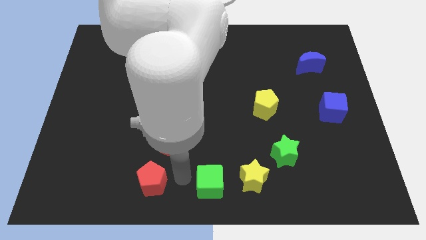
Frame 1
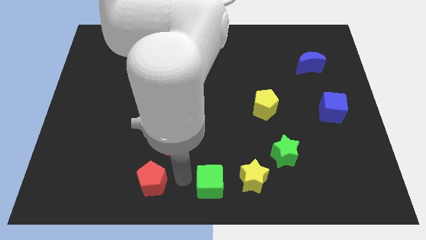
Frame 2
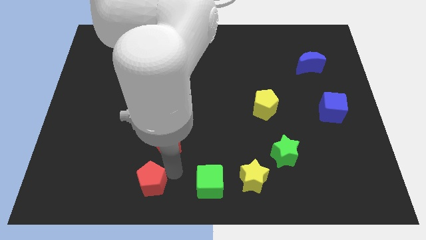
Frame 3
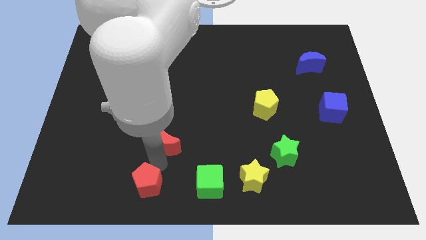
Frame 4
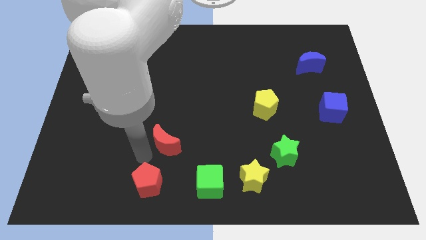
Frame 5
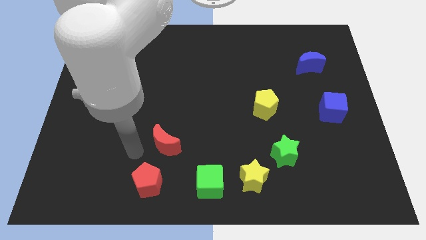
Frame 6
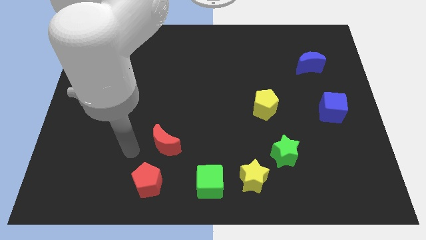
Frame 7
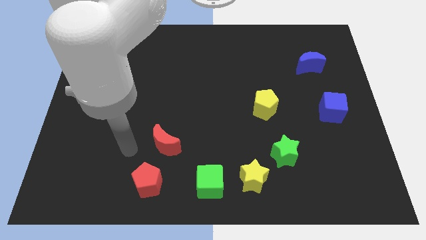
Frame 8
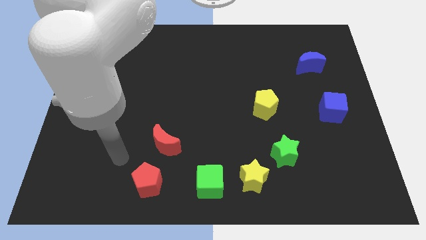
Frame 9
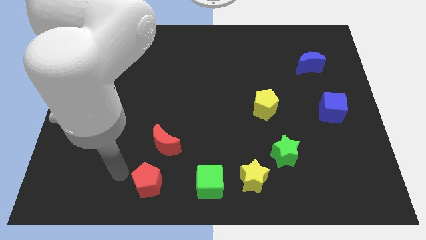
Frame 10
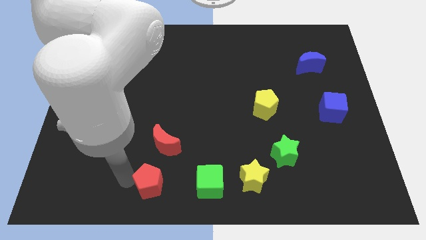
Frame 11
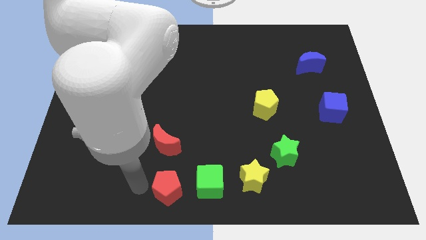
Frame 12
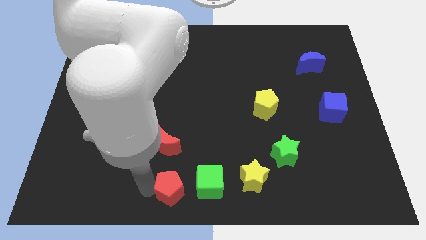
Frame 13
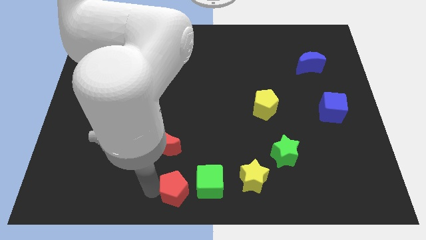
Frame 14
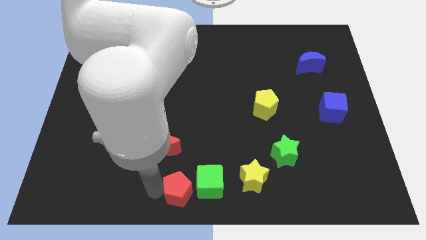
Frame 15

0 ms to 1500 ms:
slide the red pentagon close to the left side of the green cube

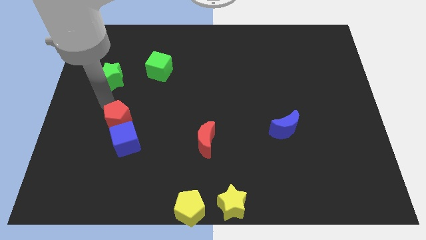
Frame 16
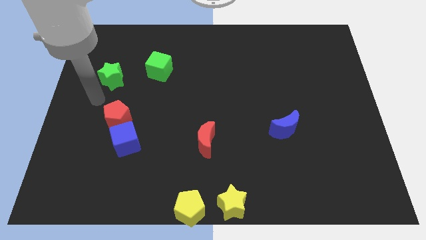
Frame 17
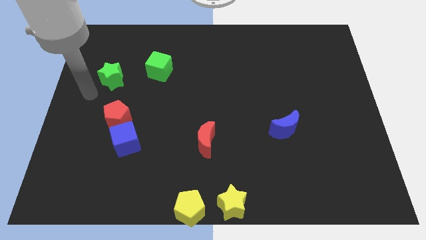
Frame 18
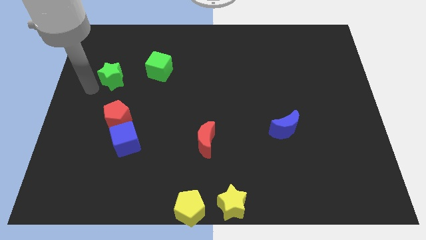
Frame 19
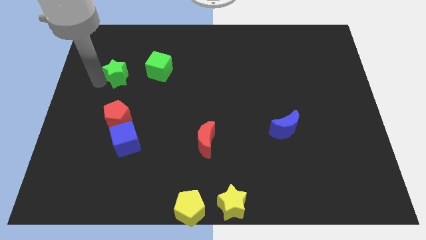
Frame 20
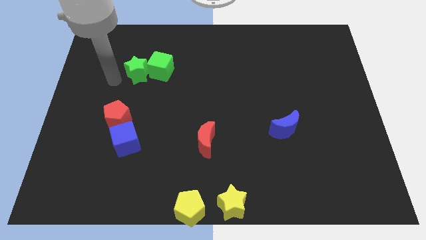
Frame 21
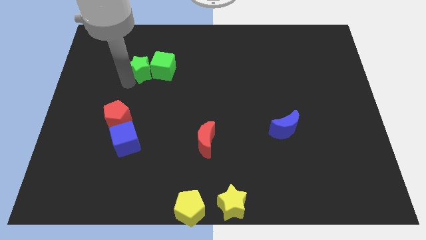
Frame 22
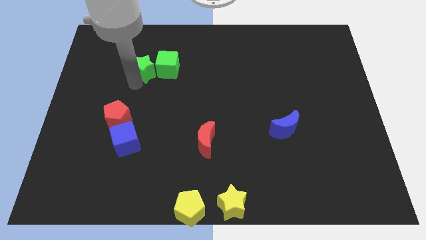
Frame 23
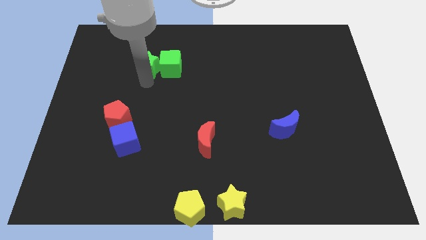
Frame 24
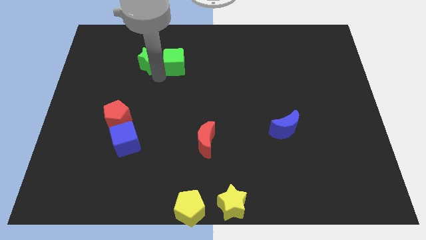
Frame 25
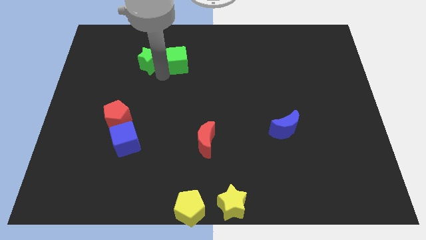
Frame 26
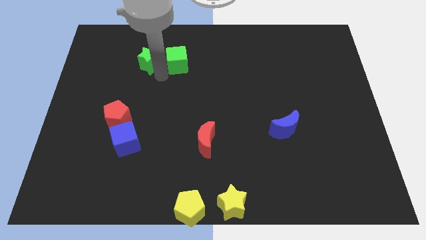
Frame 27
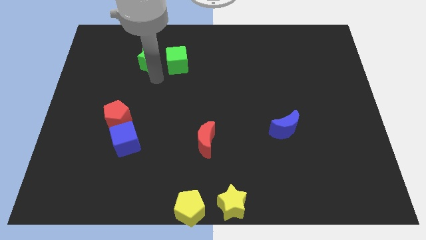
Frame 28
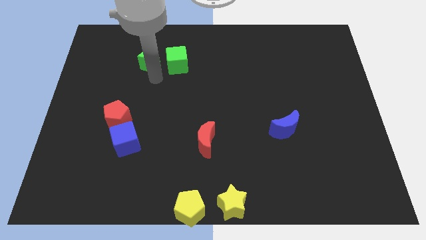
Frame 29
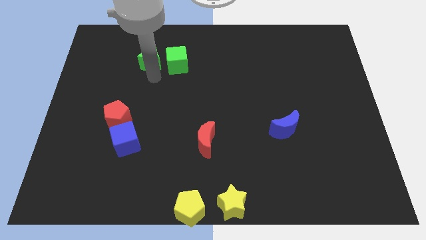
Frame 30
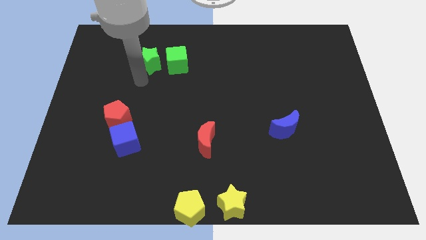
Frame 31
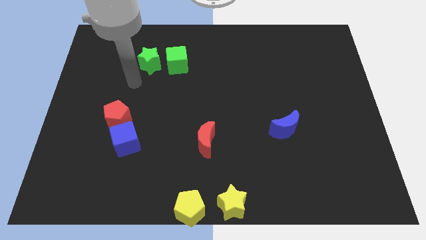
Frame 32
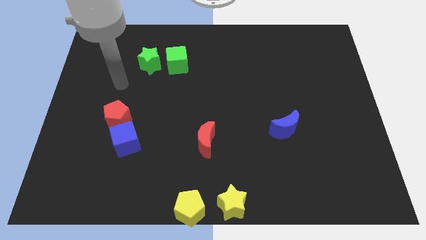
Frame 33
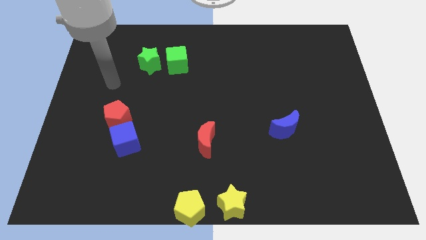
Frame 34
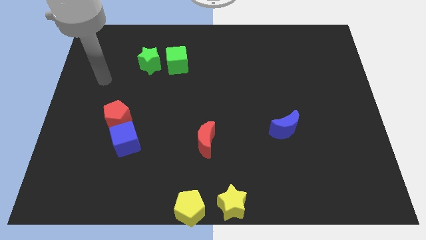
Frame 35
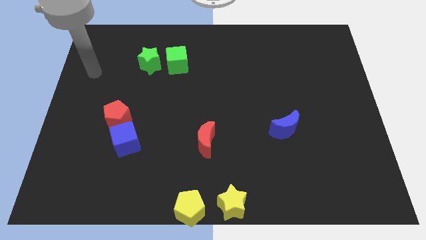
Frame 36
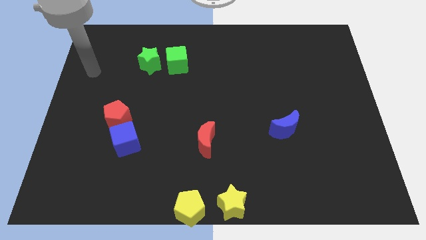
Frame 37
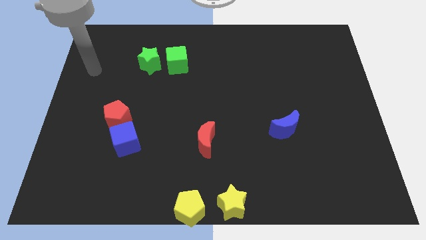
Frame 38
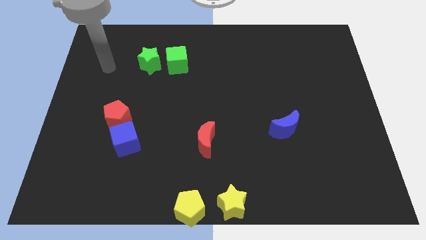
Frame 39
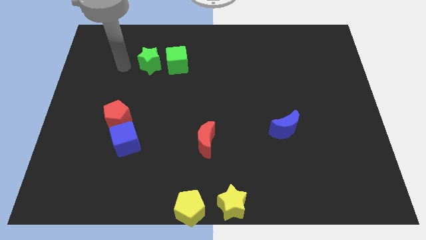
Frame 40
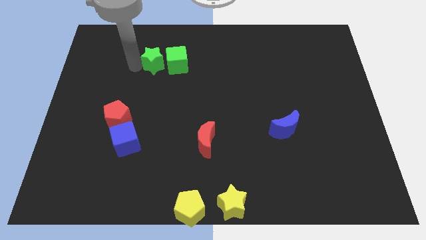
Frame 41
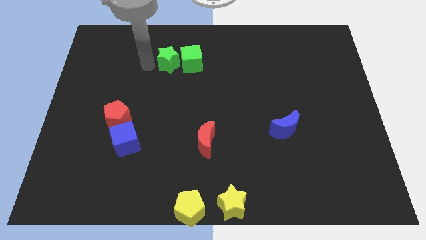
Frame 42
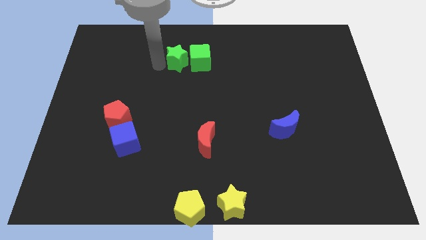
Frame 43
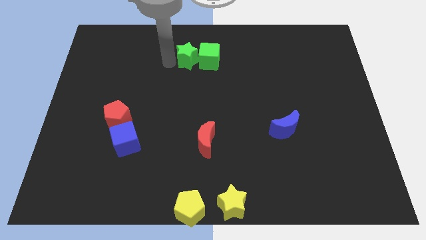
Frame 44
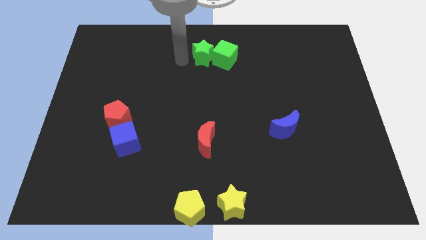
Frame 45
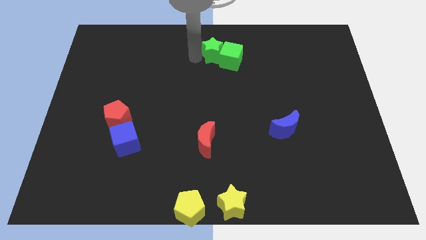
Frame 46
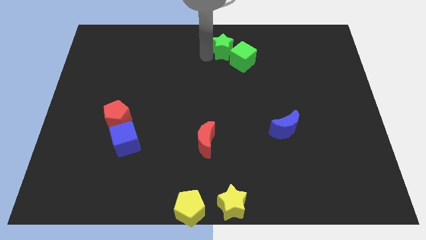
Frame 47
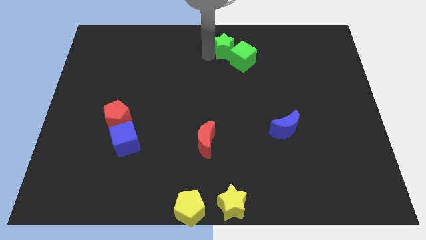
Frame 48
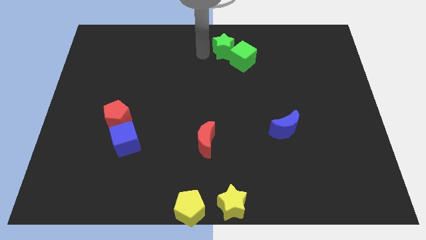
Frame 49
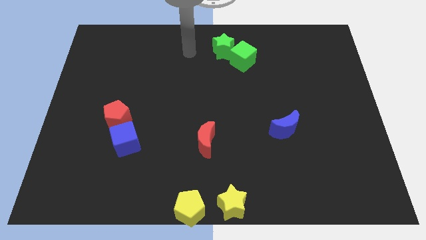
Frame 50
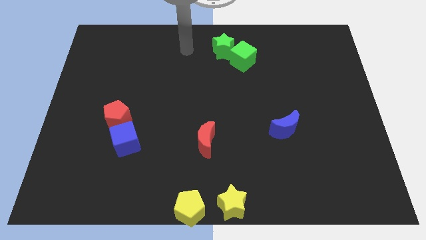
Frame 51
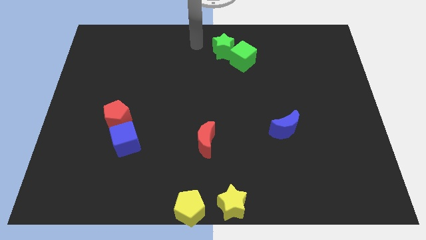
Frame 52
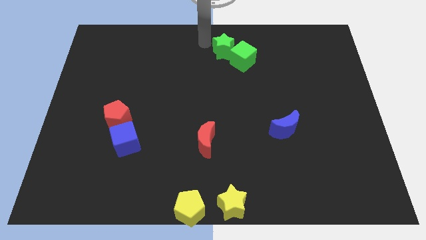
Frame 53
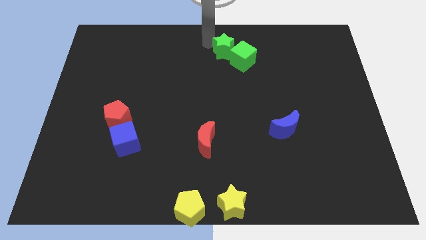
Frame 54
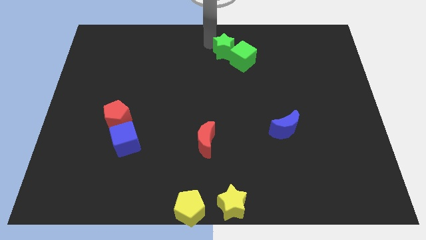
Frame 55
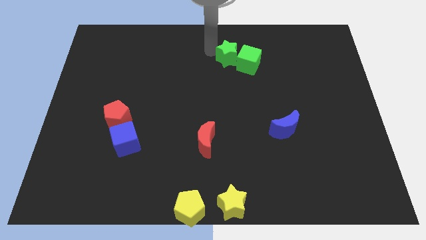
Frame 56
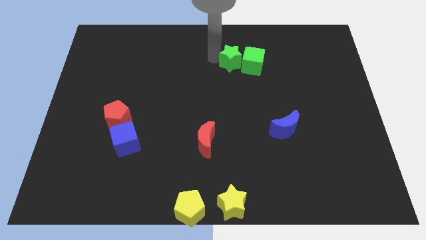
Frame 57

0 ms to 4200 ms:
move the green blocks towards the right side

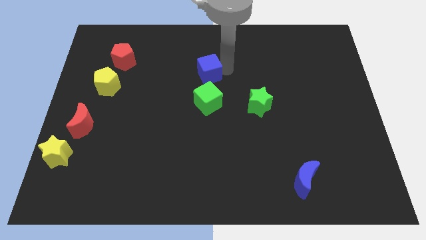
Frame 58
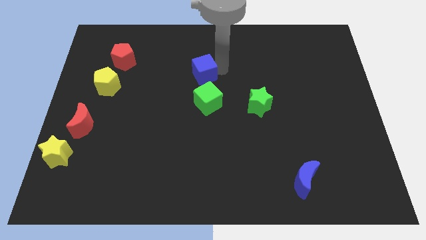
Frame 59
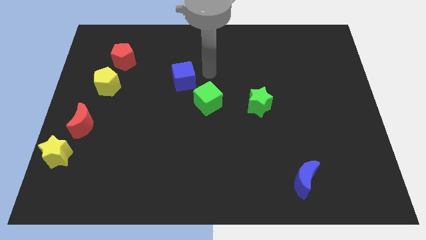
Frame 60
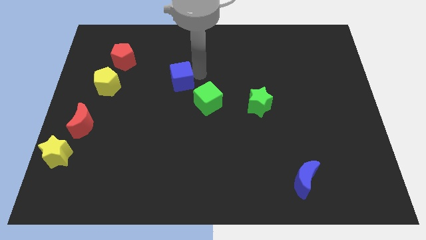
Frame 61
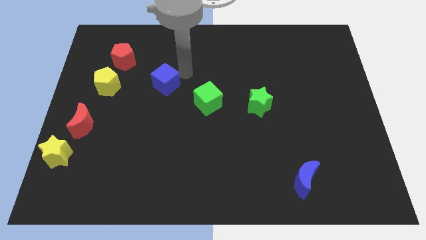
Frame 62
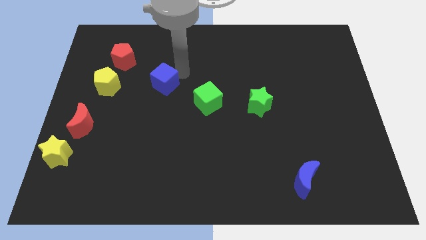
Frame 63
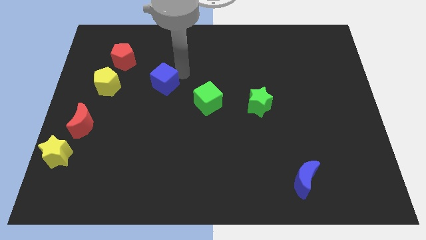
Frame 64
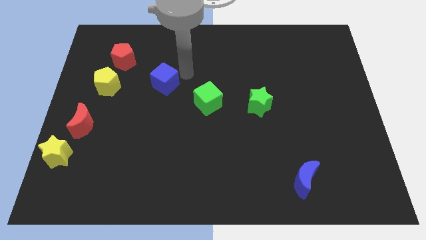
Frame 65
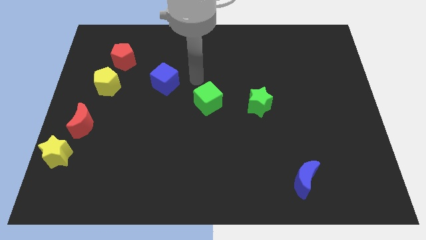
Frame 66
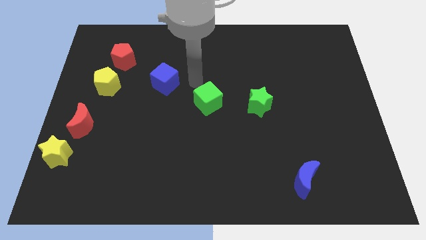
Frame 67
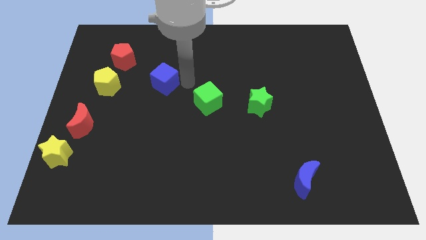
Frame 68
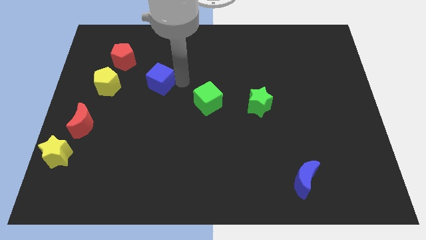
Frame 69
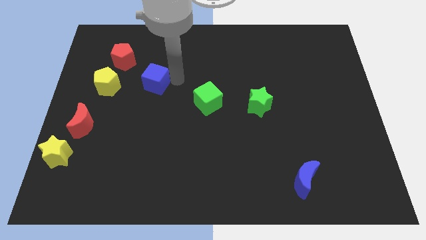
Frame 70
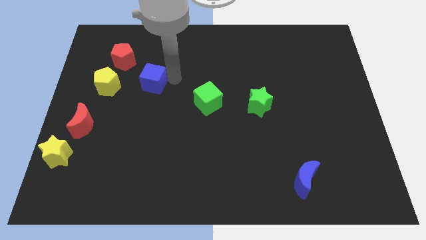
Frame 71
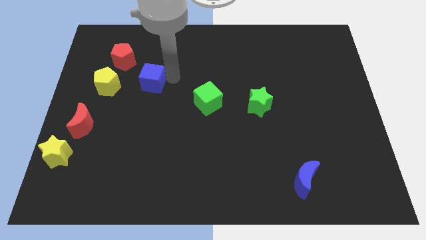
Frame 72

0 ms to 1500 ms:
move the blue cube towards the right side of the yellow pentagon

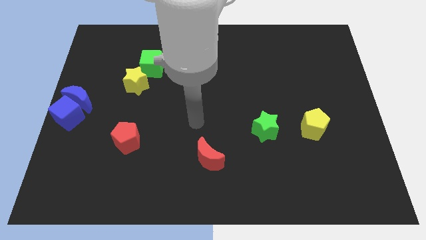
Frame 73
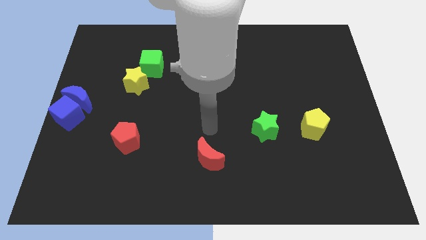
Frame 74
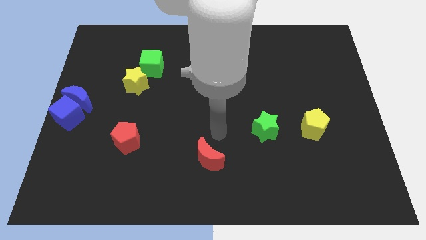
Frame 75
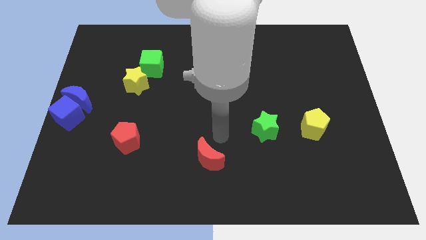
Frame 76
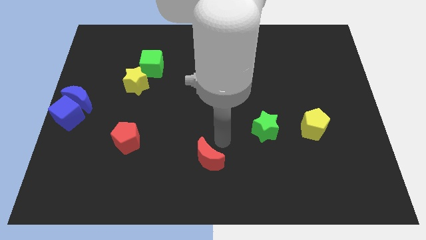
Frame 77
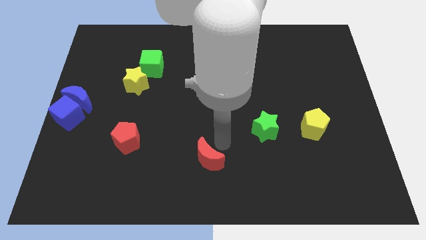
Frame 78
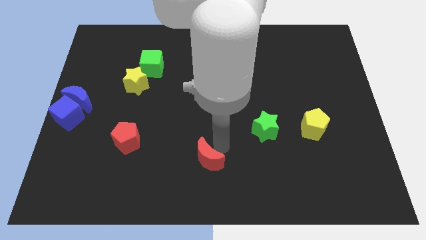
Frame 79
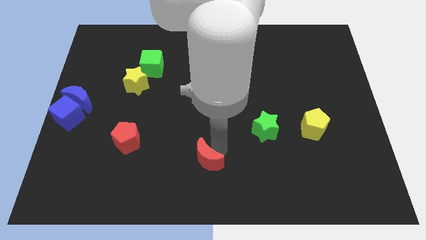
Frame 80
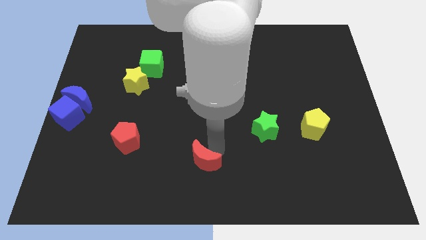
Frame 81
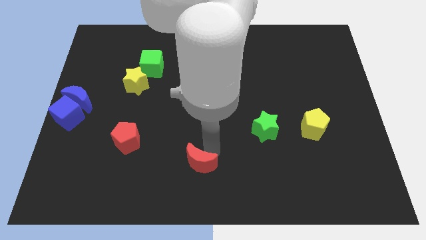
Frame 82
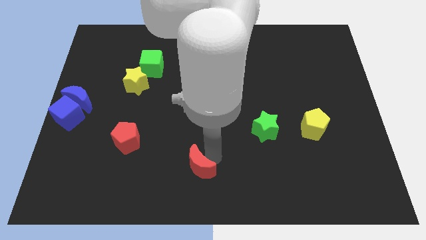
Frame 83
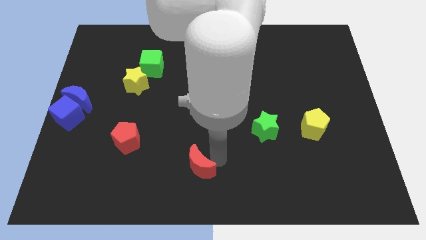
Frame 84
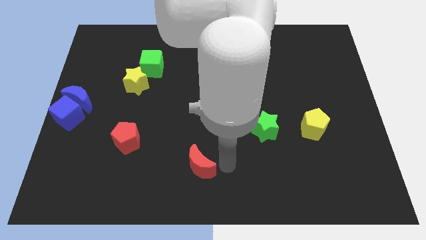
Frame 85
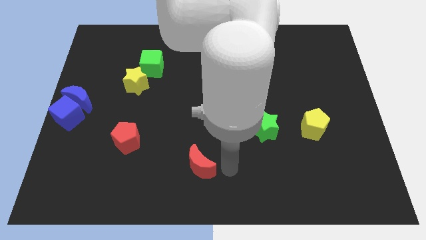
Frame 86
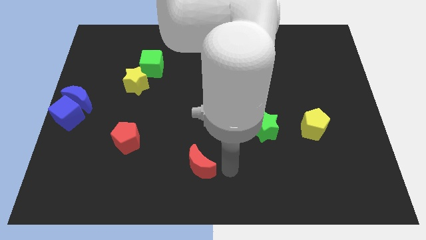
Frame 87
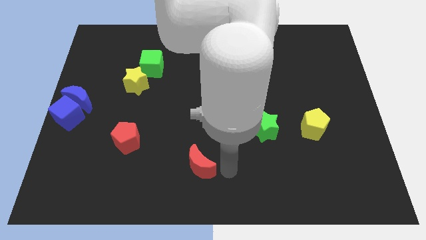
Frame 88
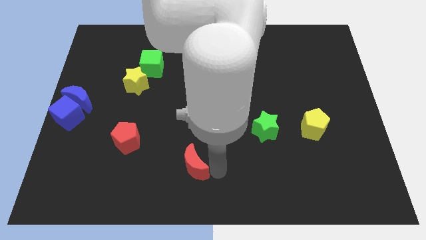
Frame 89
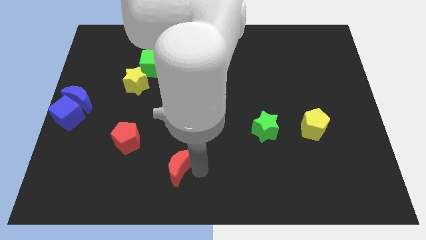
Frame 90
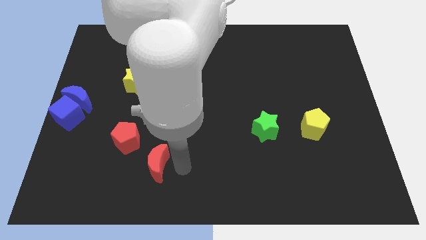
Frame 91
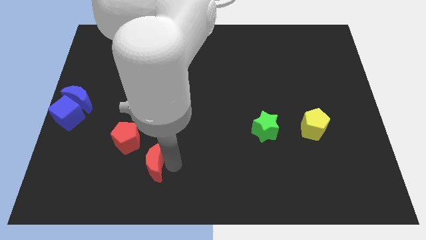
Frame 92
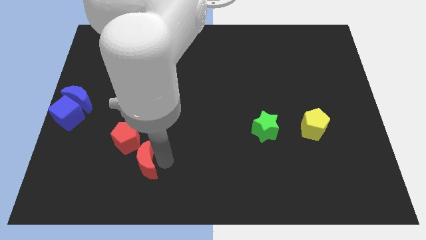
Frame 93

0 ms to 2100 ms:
drag red moon into red pentagon
